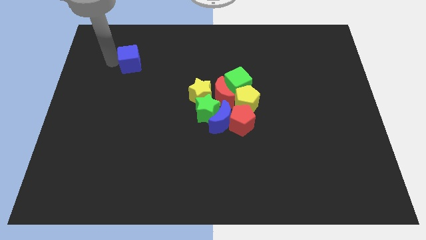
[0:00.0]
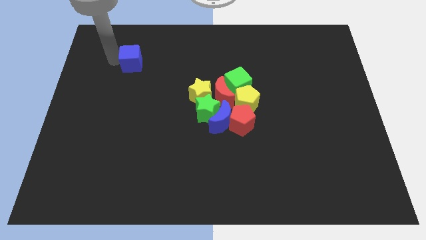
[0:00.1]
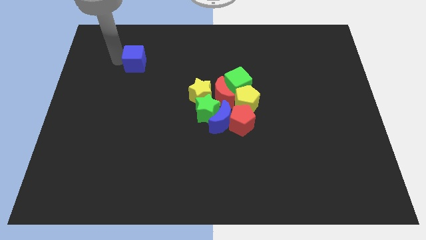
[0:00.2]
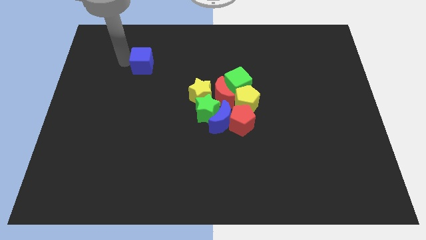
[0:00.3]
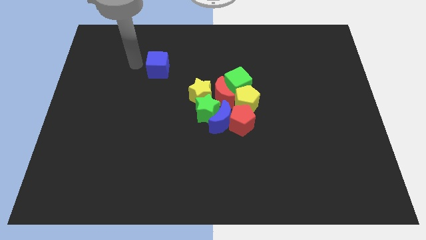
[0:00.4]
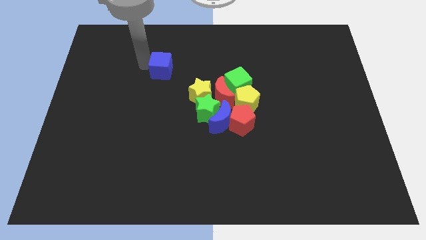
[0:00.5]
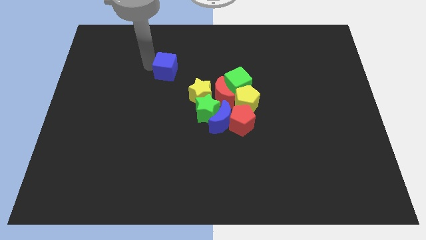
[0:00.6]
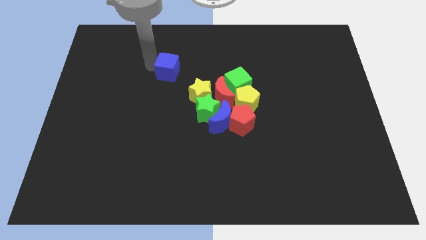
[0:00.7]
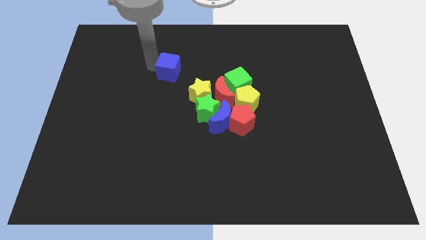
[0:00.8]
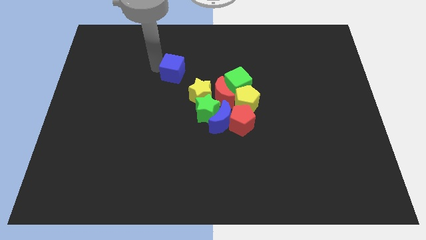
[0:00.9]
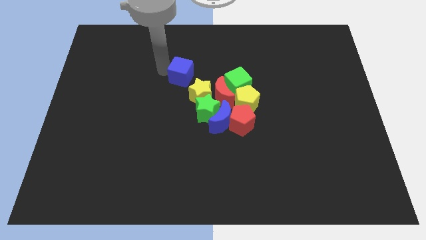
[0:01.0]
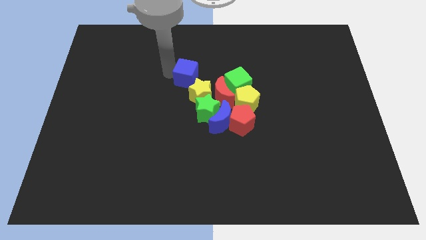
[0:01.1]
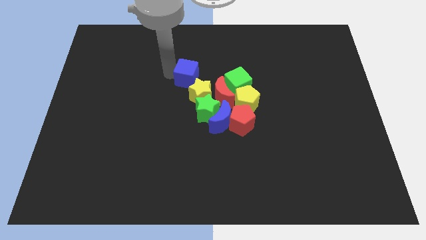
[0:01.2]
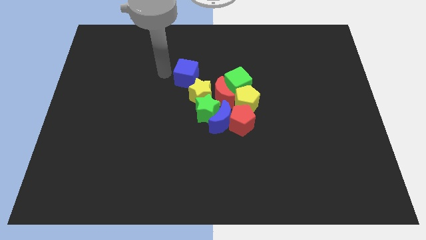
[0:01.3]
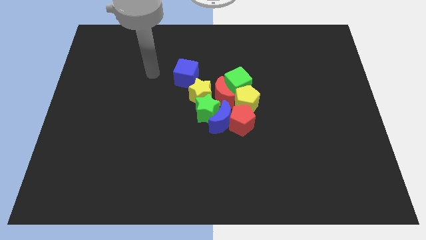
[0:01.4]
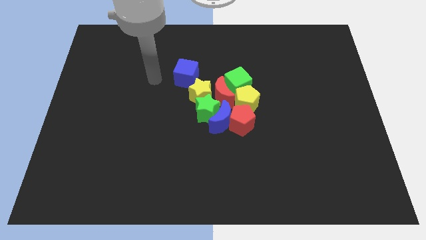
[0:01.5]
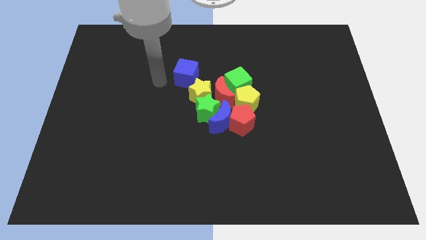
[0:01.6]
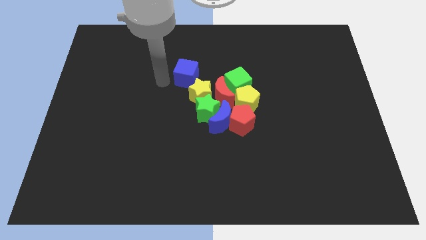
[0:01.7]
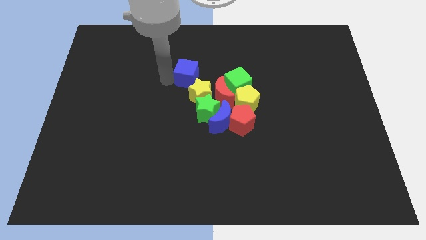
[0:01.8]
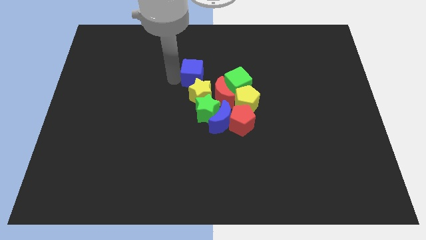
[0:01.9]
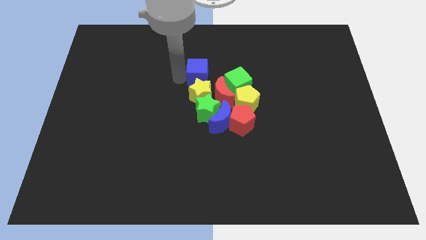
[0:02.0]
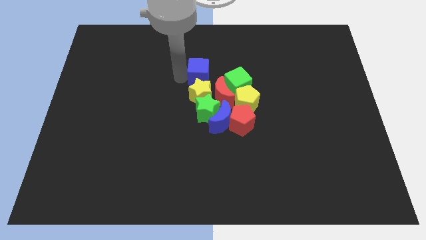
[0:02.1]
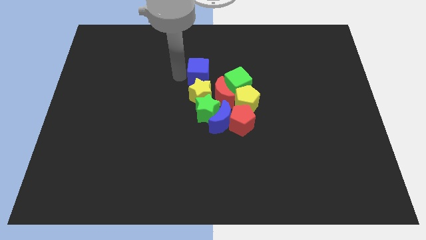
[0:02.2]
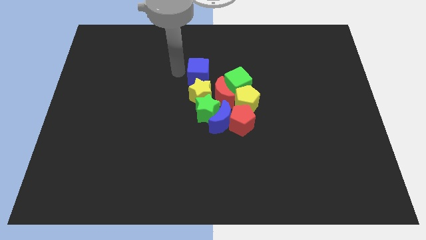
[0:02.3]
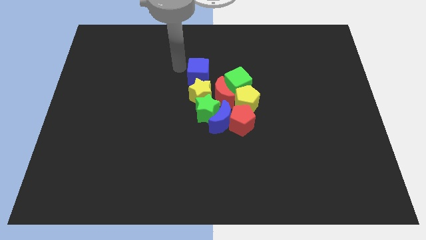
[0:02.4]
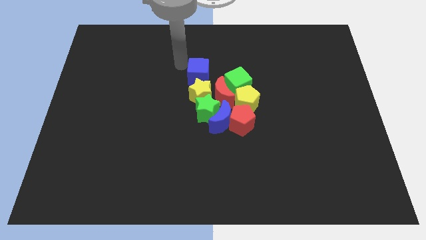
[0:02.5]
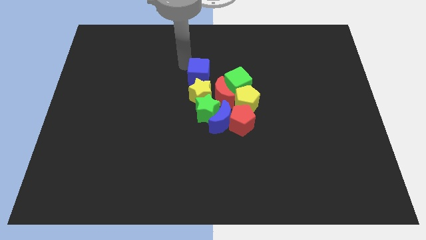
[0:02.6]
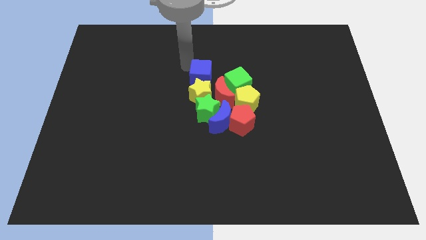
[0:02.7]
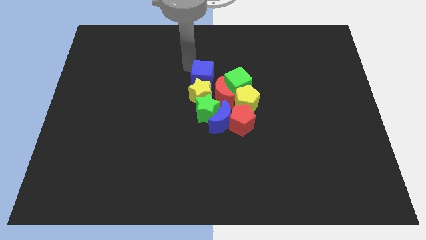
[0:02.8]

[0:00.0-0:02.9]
push the blue cube to the top of the yellow star

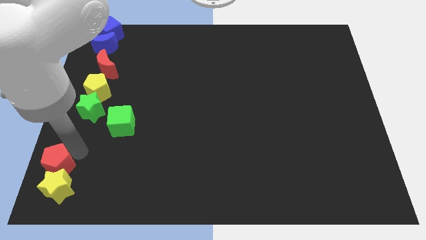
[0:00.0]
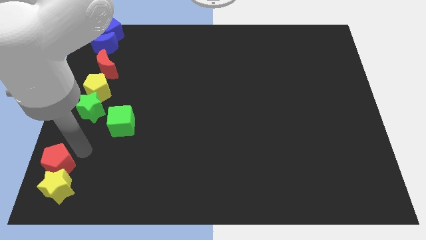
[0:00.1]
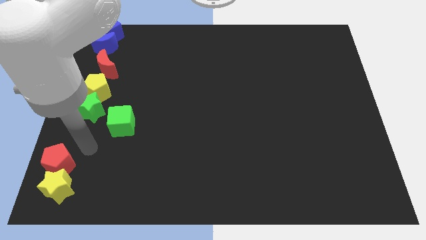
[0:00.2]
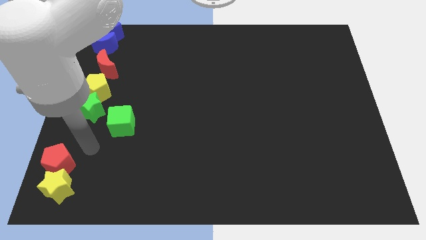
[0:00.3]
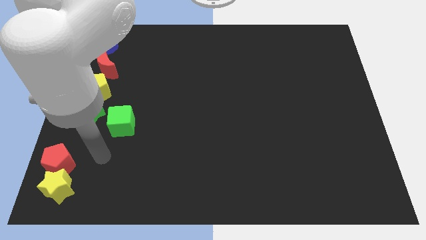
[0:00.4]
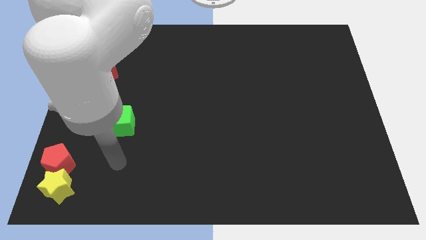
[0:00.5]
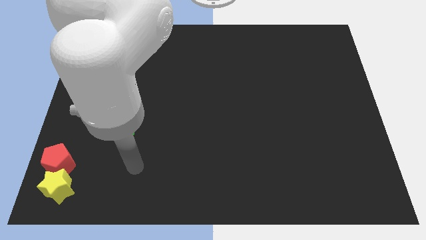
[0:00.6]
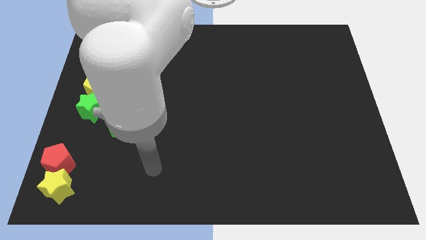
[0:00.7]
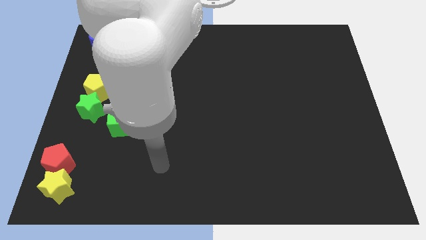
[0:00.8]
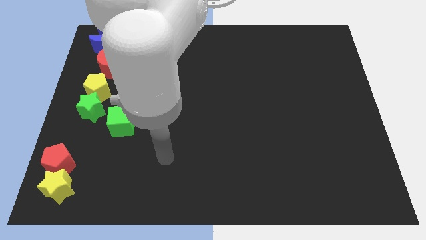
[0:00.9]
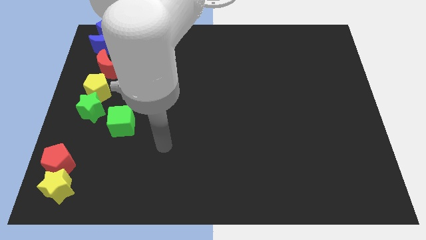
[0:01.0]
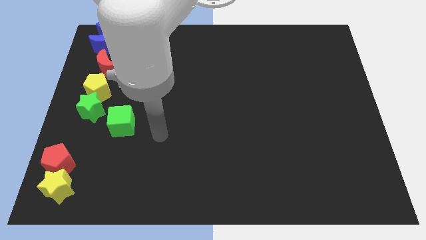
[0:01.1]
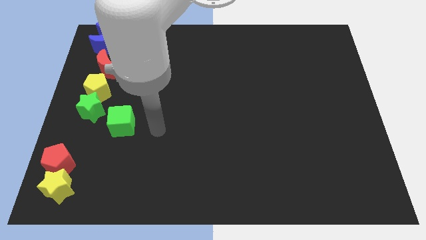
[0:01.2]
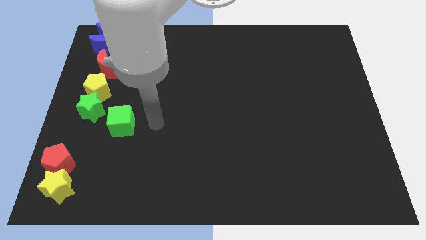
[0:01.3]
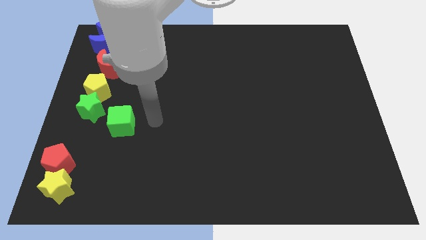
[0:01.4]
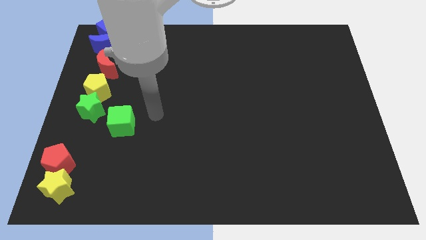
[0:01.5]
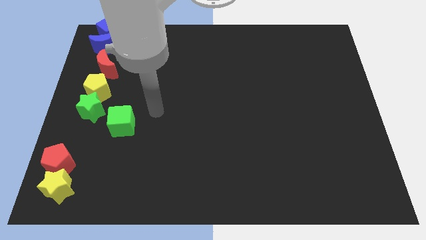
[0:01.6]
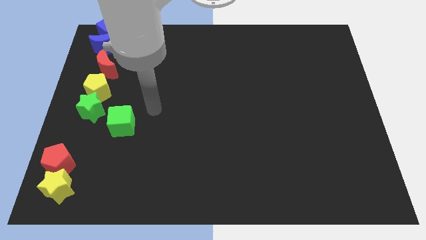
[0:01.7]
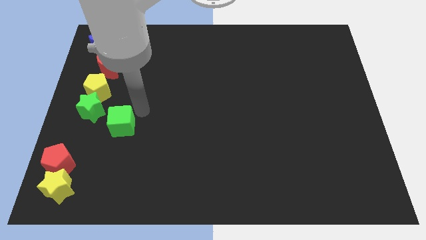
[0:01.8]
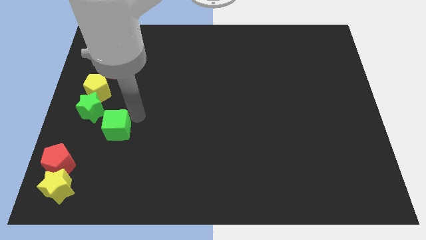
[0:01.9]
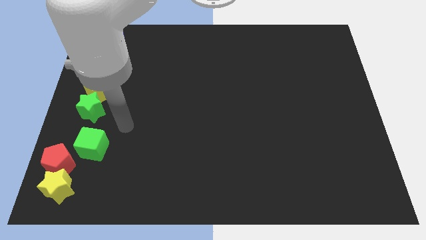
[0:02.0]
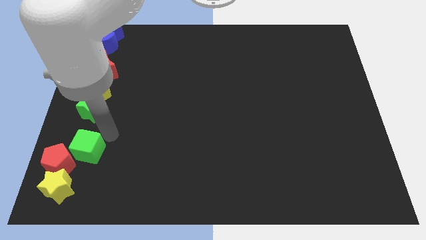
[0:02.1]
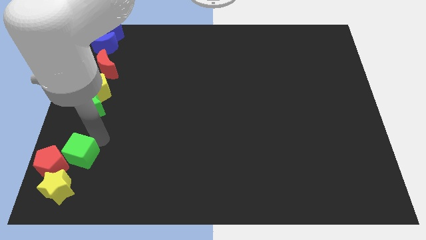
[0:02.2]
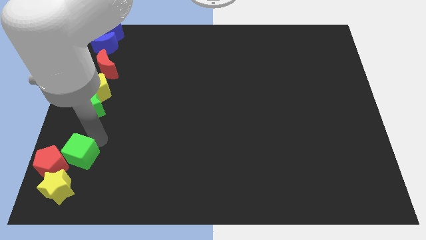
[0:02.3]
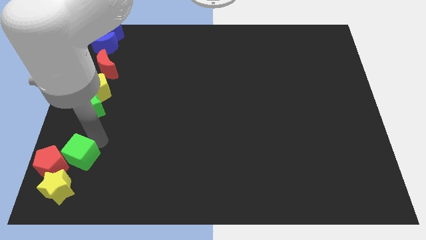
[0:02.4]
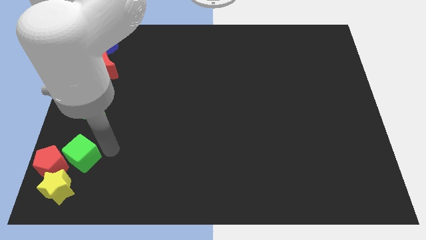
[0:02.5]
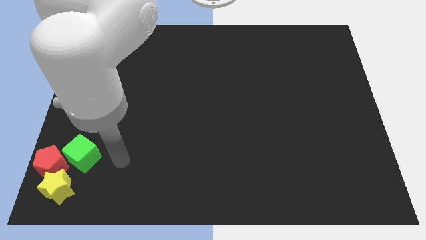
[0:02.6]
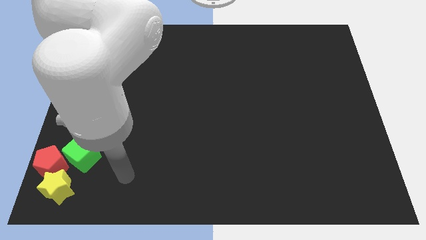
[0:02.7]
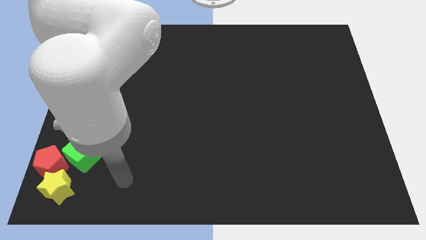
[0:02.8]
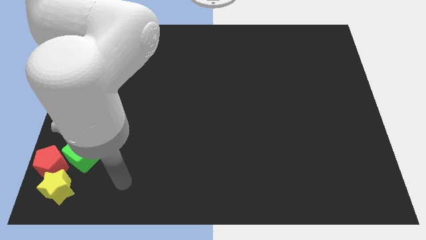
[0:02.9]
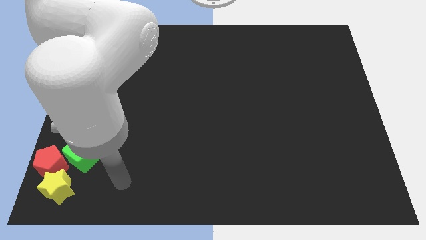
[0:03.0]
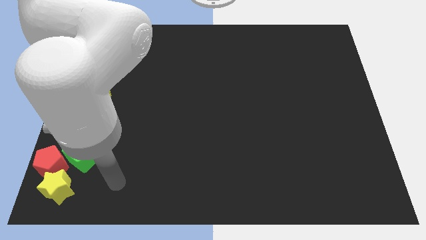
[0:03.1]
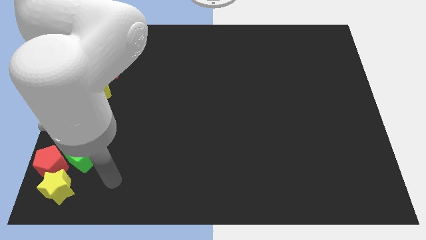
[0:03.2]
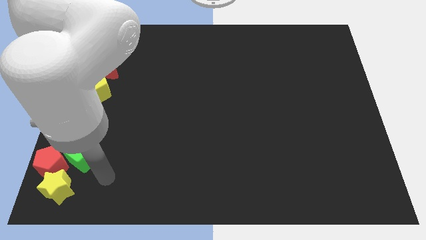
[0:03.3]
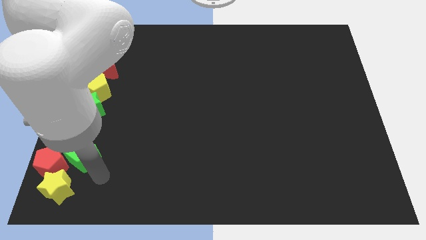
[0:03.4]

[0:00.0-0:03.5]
push the green cube to the right of the red pentagon

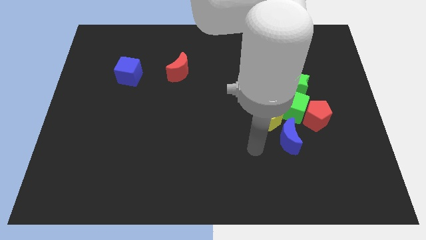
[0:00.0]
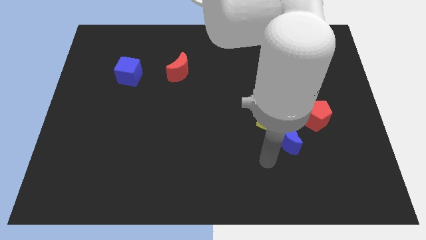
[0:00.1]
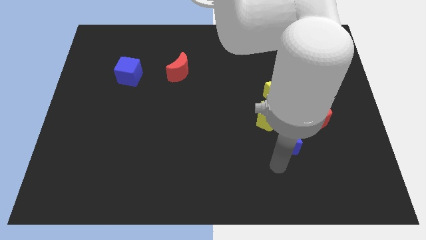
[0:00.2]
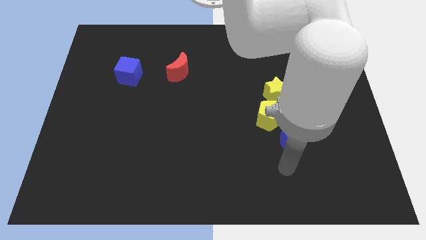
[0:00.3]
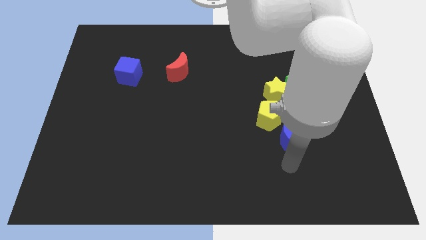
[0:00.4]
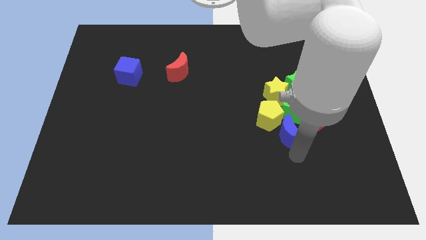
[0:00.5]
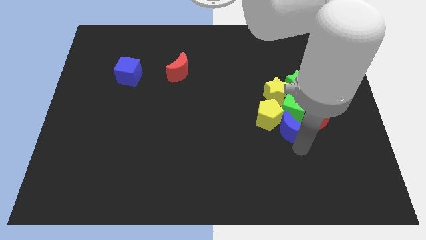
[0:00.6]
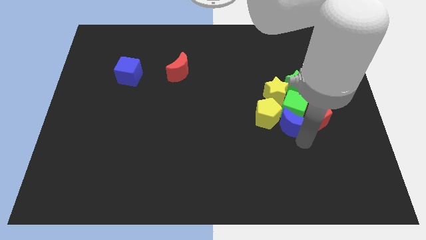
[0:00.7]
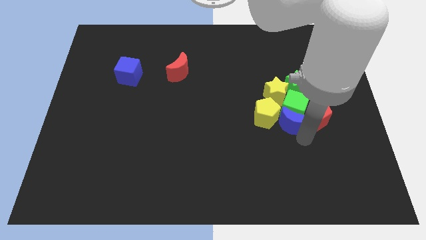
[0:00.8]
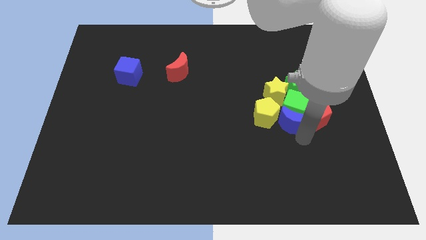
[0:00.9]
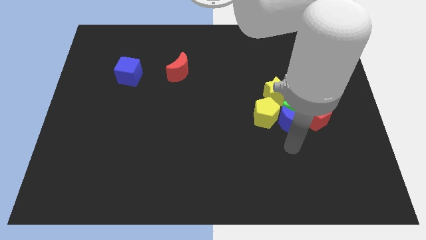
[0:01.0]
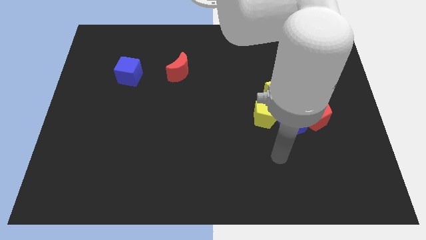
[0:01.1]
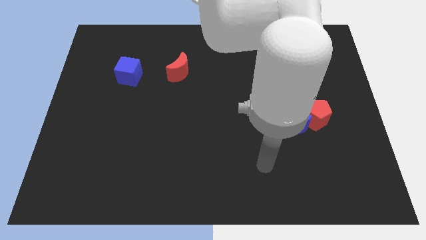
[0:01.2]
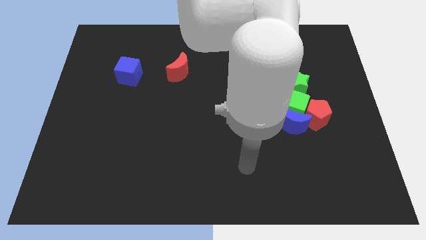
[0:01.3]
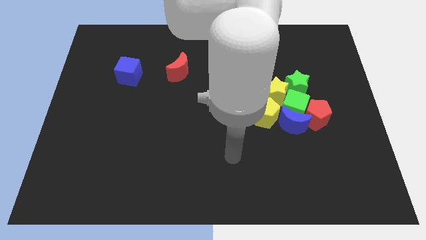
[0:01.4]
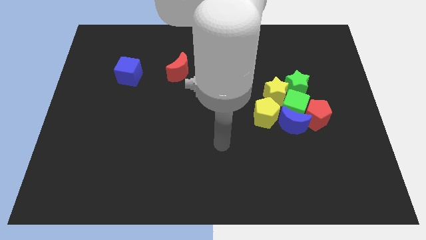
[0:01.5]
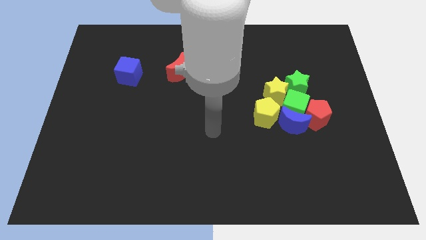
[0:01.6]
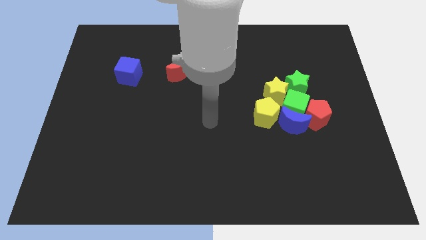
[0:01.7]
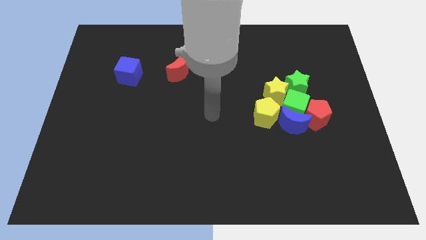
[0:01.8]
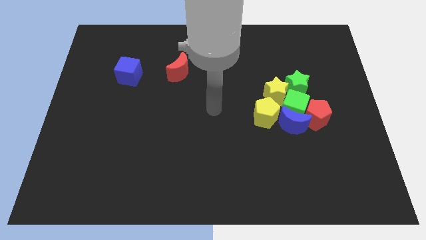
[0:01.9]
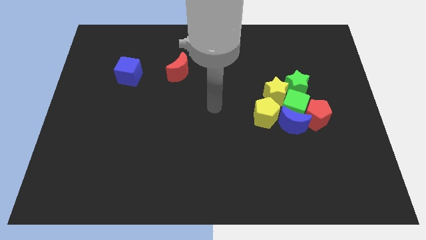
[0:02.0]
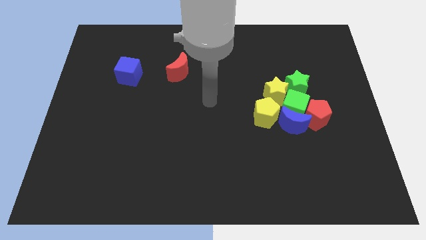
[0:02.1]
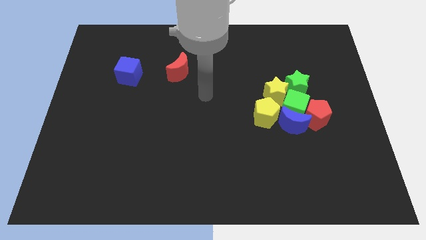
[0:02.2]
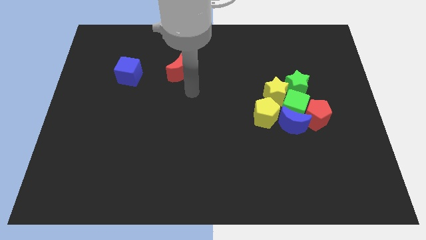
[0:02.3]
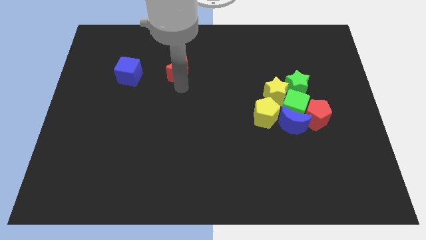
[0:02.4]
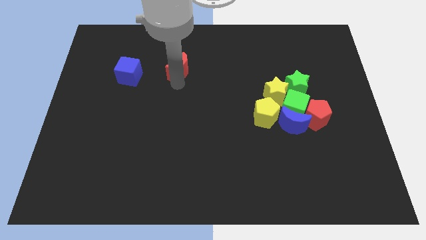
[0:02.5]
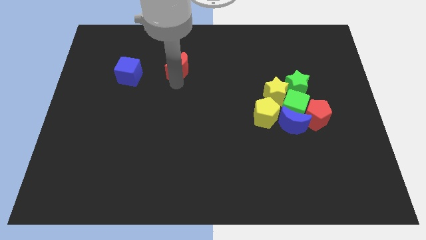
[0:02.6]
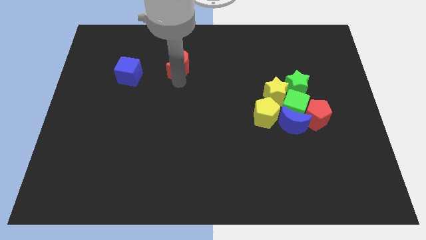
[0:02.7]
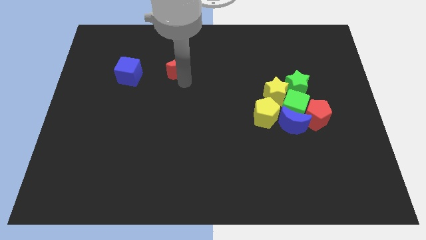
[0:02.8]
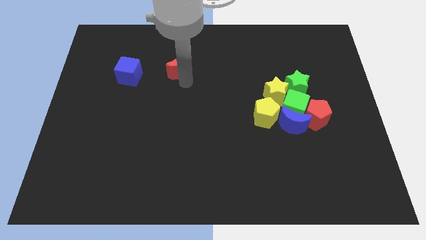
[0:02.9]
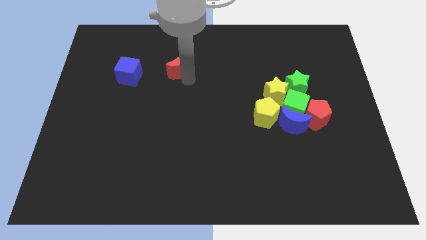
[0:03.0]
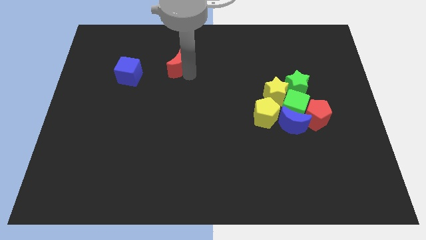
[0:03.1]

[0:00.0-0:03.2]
move the blue moon into the green cube
